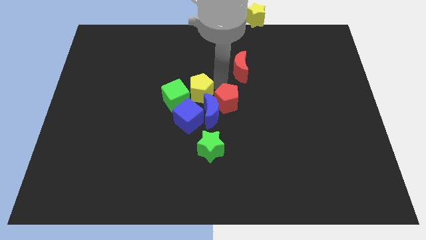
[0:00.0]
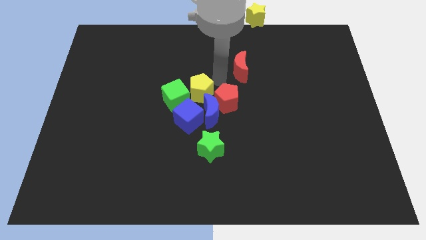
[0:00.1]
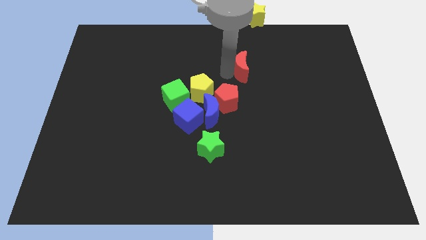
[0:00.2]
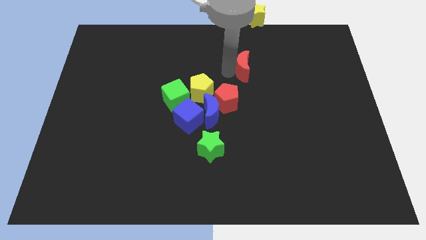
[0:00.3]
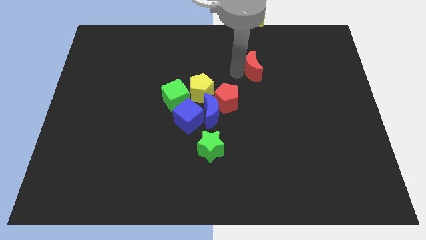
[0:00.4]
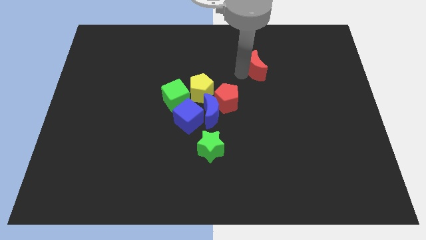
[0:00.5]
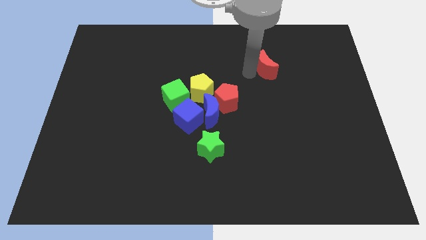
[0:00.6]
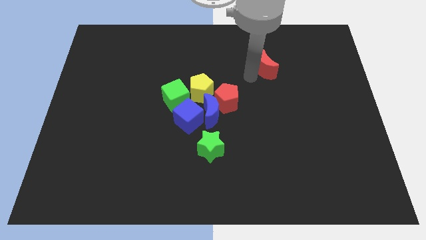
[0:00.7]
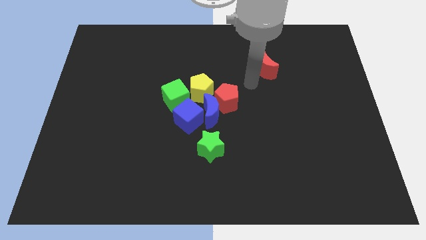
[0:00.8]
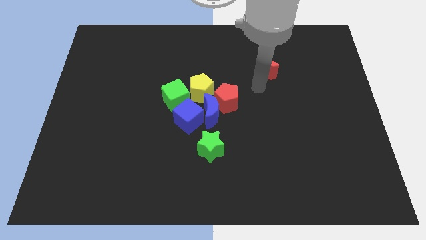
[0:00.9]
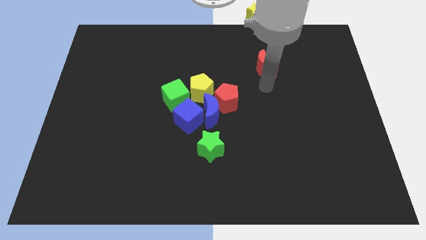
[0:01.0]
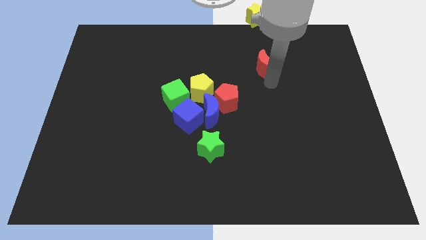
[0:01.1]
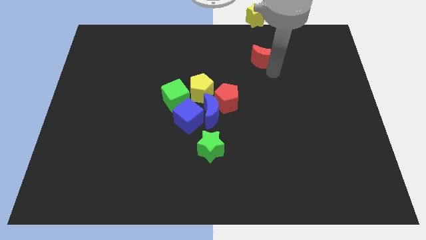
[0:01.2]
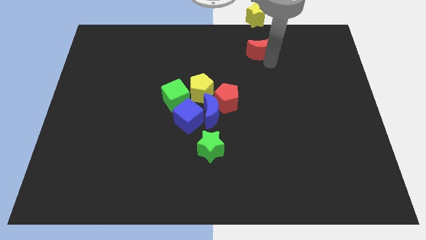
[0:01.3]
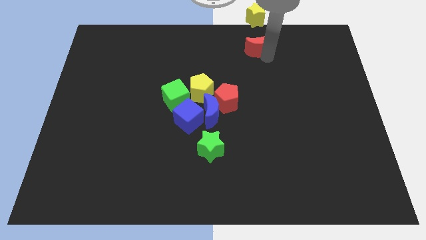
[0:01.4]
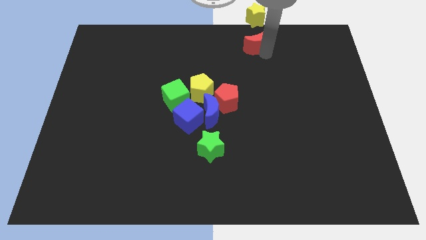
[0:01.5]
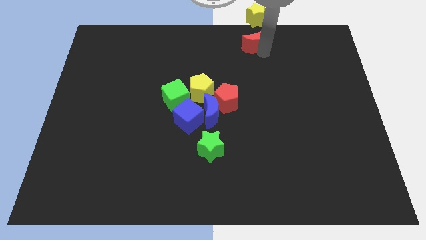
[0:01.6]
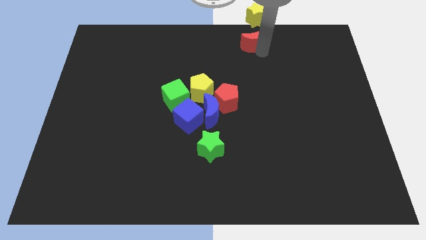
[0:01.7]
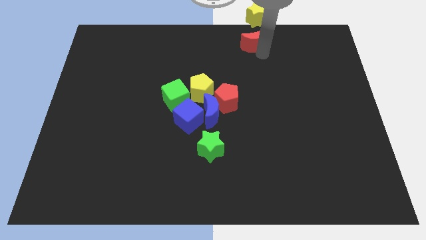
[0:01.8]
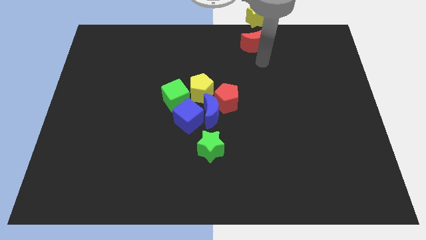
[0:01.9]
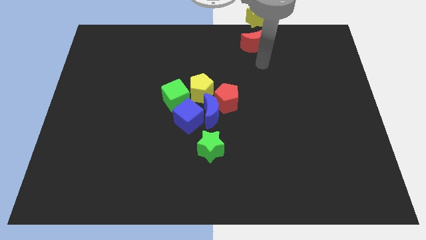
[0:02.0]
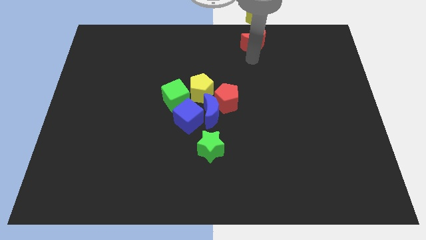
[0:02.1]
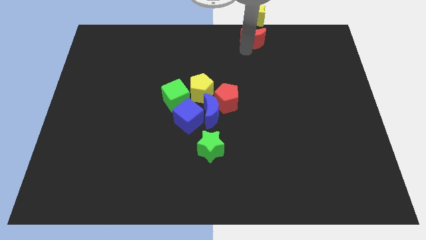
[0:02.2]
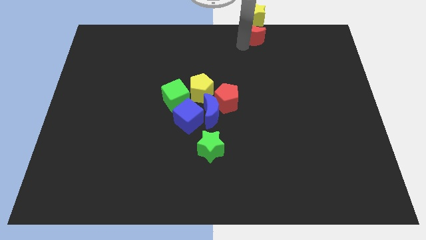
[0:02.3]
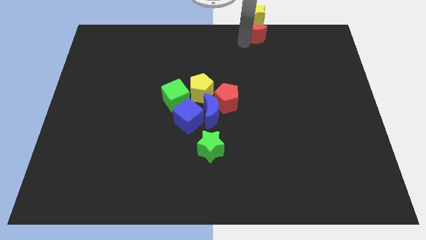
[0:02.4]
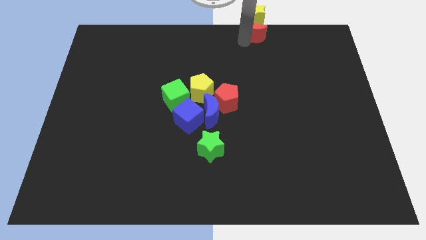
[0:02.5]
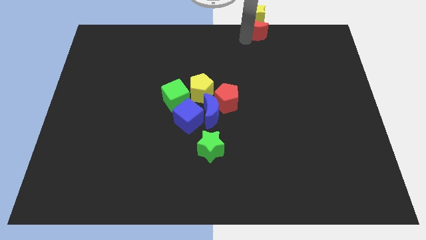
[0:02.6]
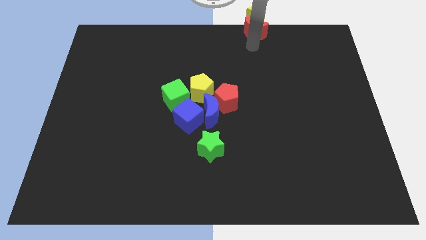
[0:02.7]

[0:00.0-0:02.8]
push the red crescent to the bottom of the yellow star

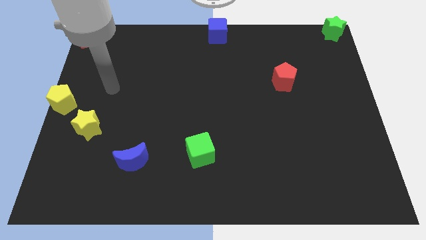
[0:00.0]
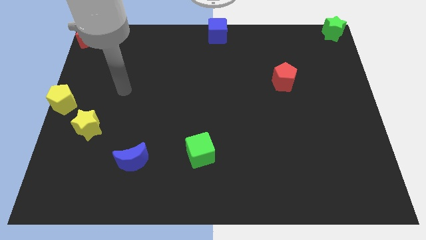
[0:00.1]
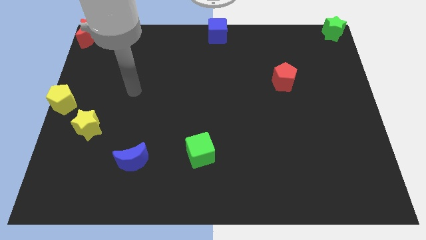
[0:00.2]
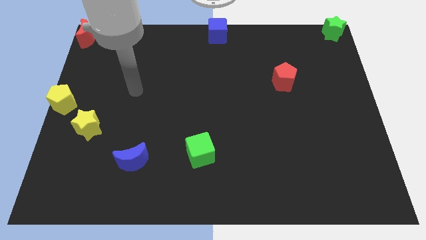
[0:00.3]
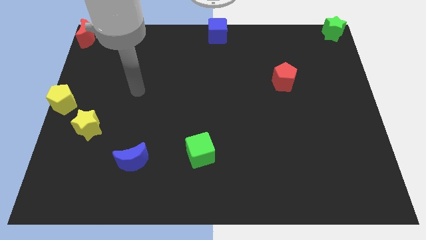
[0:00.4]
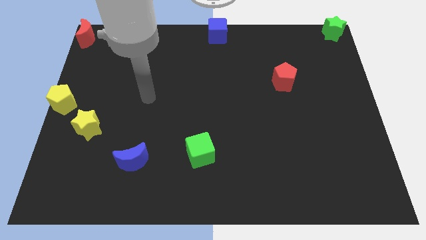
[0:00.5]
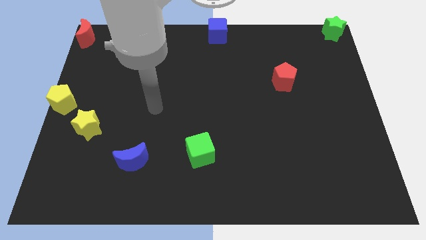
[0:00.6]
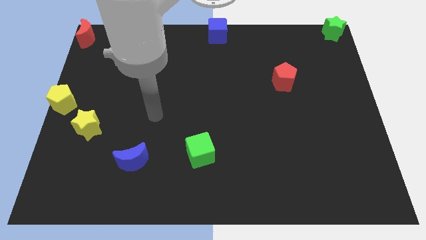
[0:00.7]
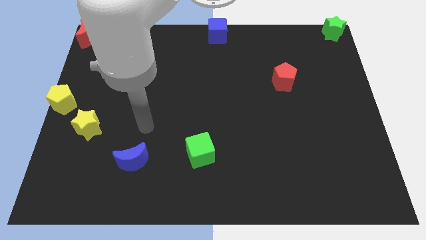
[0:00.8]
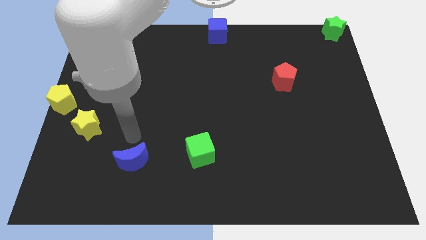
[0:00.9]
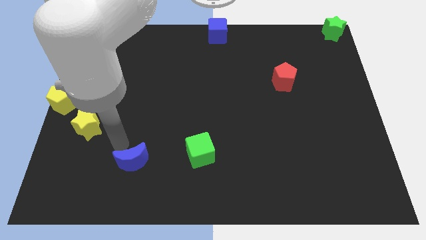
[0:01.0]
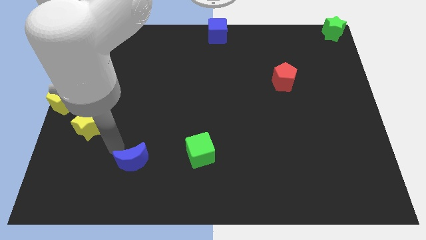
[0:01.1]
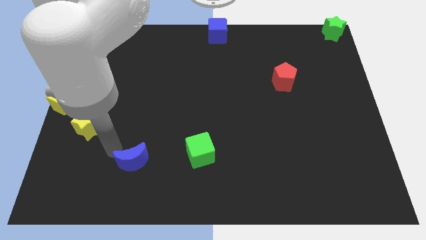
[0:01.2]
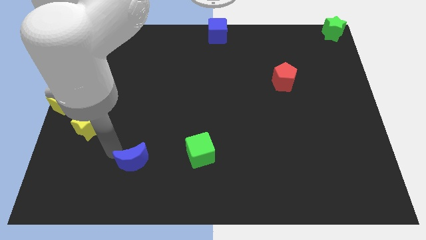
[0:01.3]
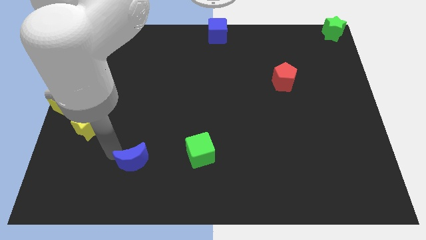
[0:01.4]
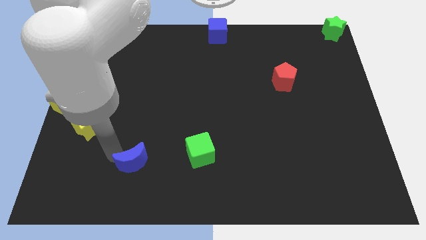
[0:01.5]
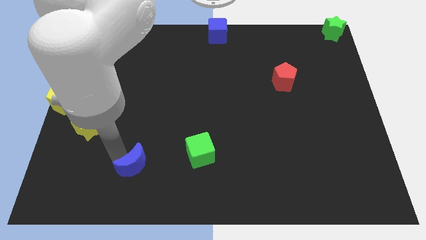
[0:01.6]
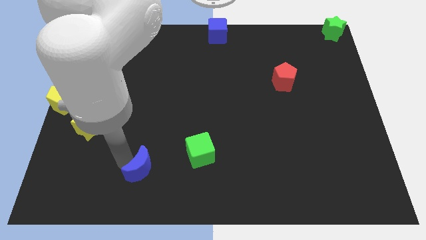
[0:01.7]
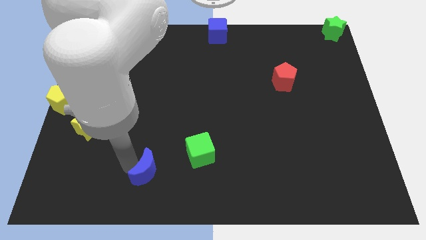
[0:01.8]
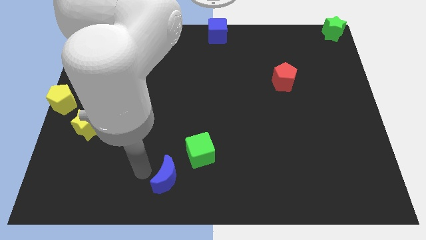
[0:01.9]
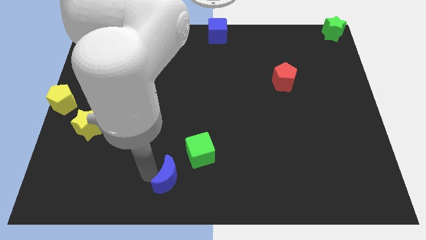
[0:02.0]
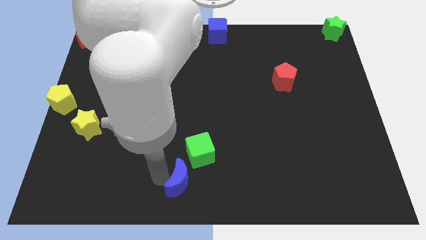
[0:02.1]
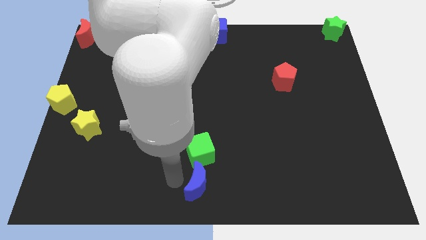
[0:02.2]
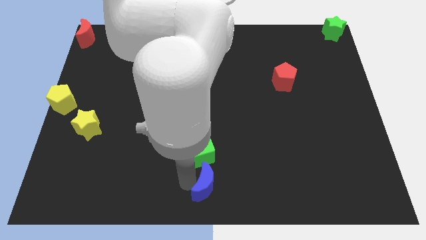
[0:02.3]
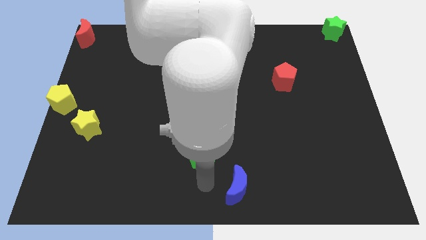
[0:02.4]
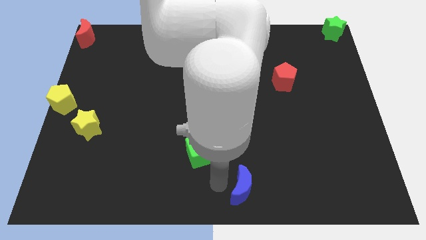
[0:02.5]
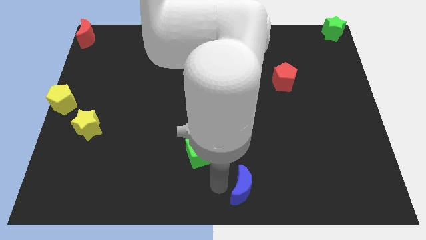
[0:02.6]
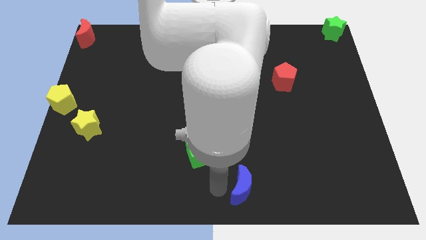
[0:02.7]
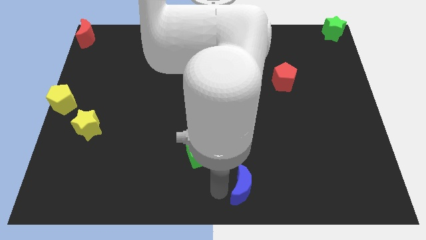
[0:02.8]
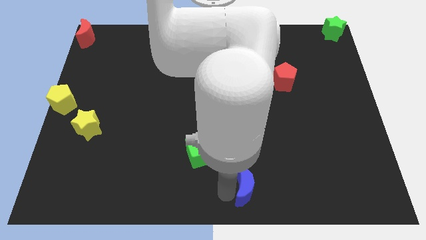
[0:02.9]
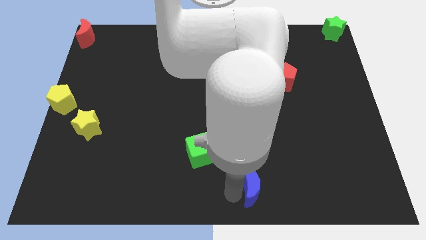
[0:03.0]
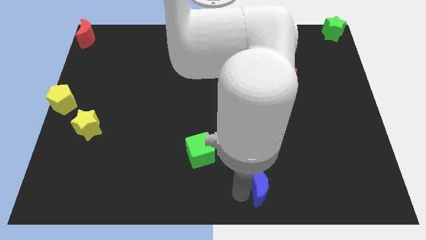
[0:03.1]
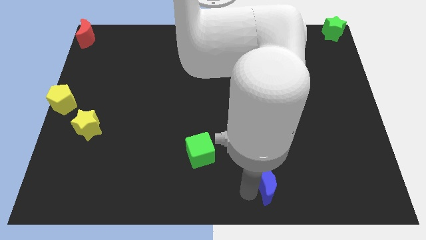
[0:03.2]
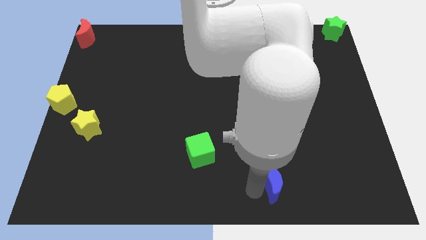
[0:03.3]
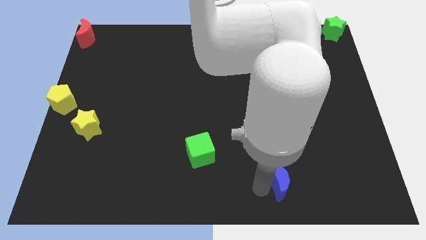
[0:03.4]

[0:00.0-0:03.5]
move the blue moon diagonal below green cube

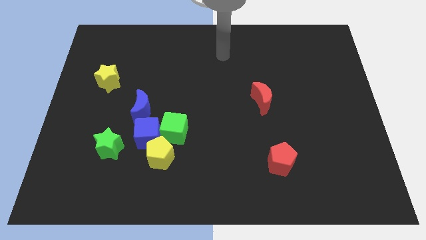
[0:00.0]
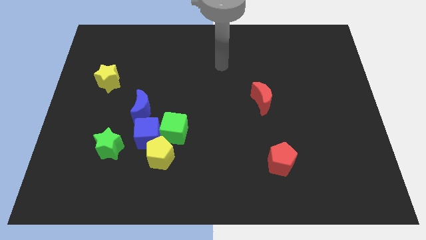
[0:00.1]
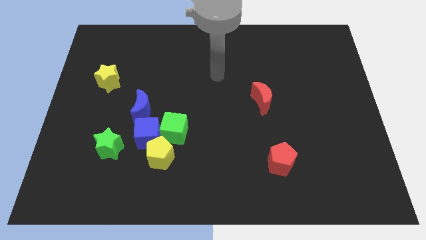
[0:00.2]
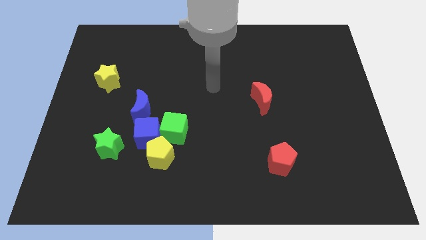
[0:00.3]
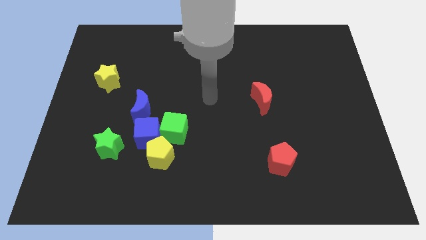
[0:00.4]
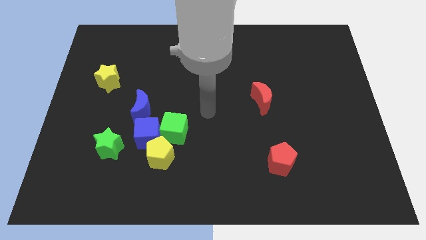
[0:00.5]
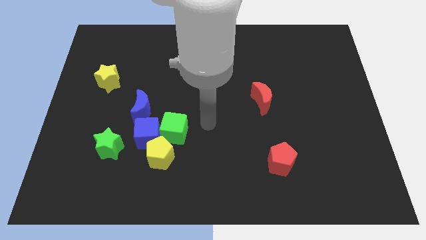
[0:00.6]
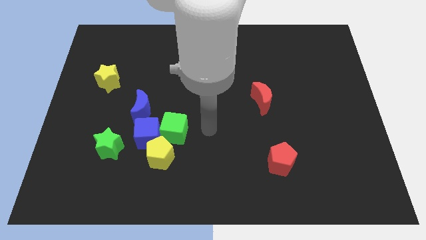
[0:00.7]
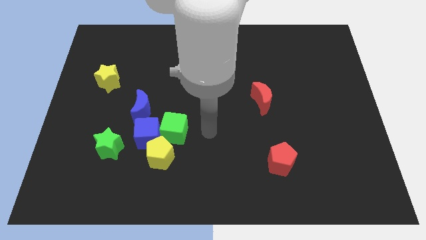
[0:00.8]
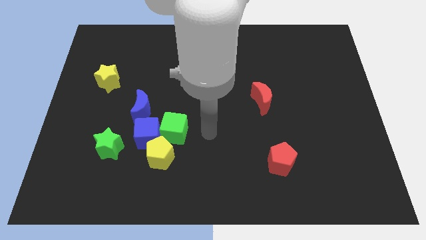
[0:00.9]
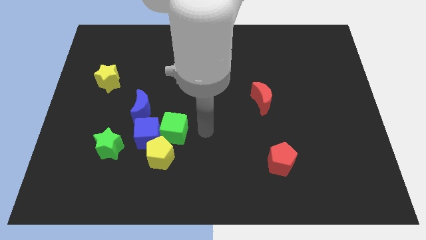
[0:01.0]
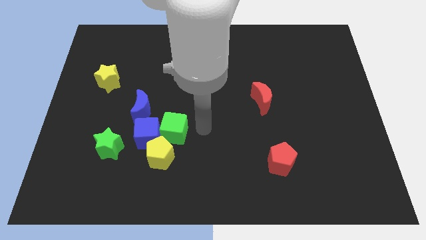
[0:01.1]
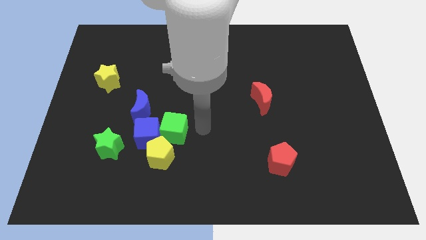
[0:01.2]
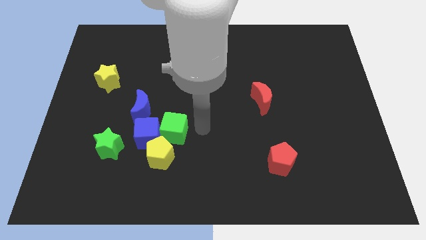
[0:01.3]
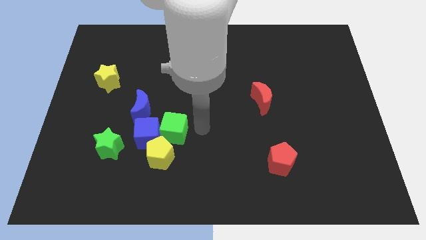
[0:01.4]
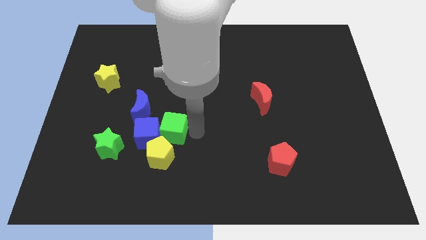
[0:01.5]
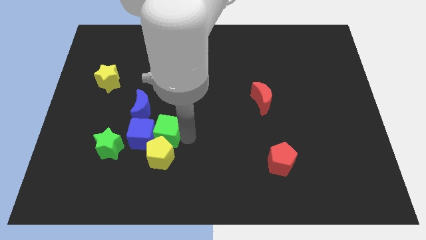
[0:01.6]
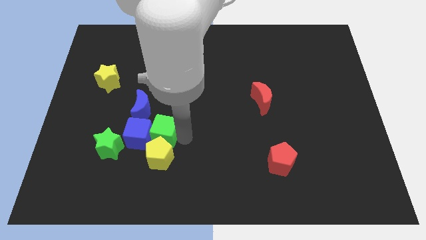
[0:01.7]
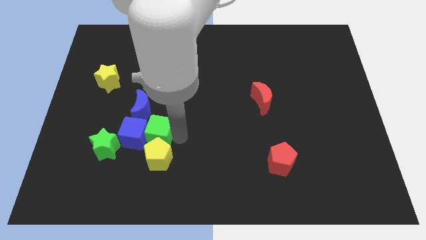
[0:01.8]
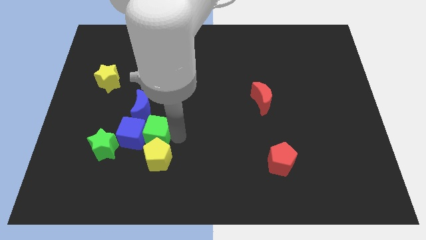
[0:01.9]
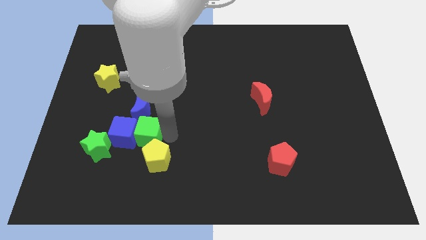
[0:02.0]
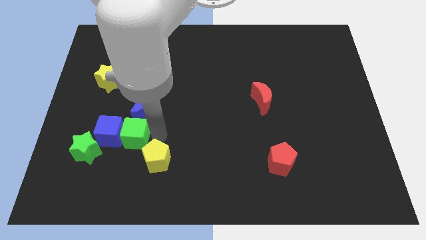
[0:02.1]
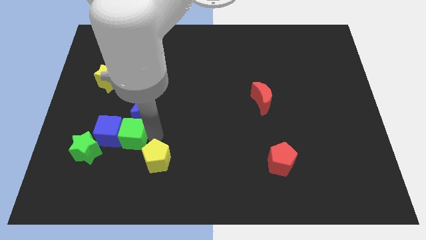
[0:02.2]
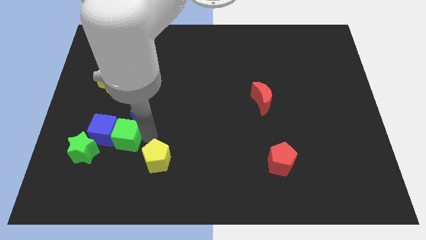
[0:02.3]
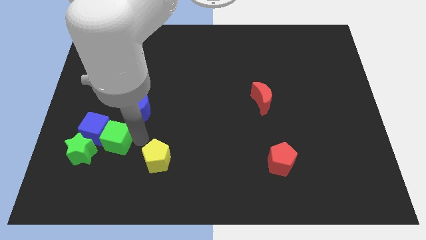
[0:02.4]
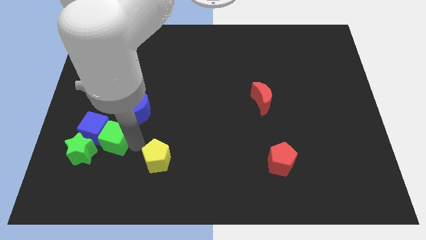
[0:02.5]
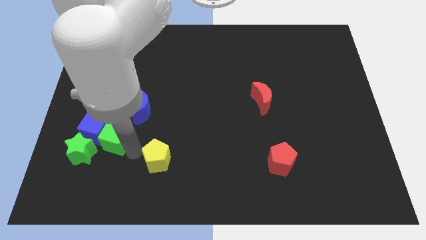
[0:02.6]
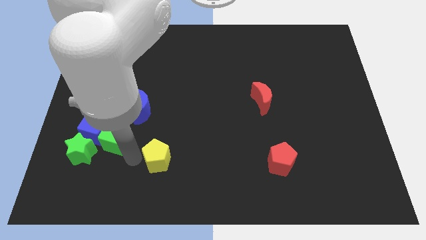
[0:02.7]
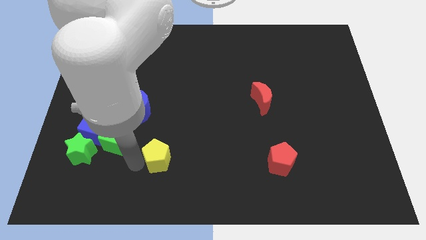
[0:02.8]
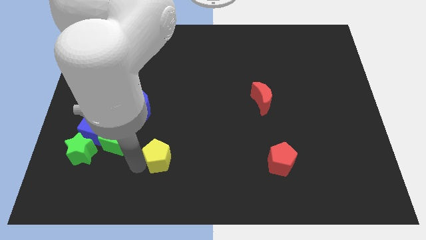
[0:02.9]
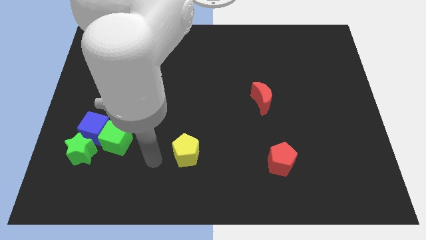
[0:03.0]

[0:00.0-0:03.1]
push the green and blue cubes to the left side
